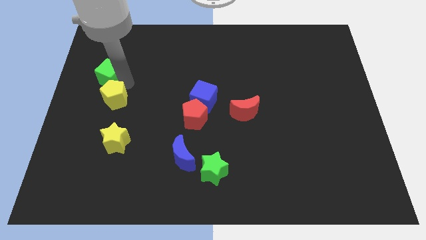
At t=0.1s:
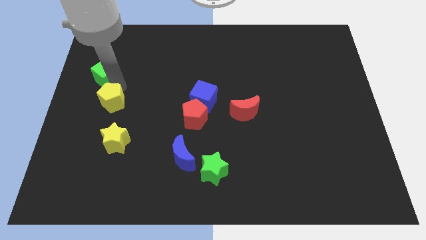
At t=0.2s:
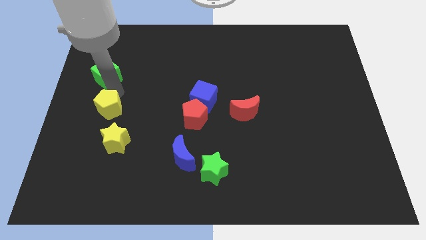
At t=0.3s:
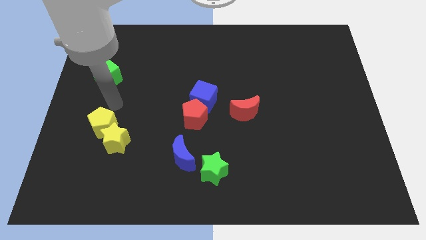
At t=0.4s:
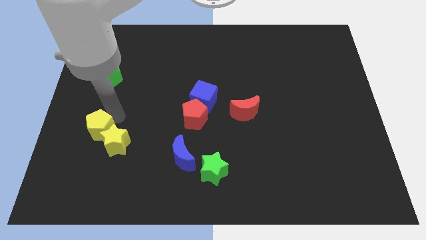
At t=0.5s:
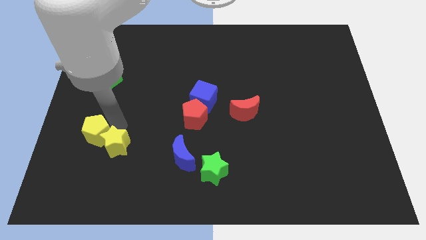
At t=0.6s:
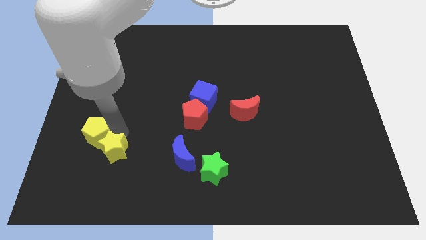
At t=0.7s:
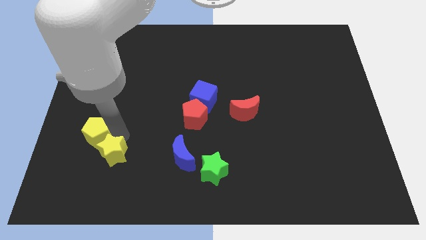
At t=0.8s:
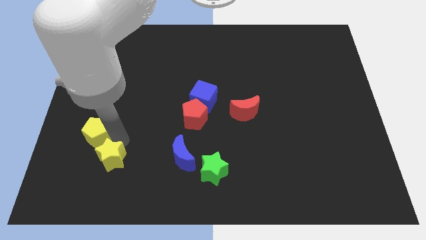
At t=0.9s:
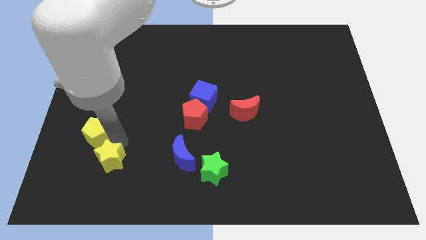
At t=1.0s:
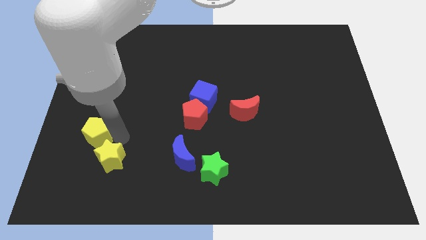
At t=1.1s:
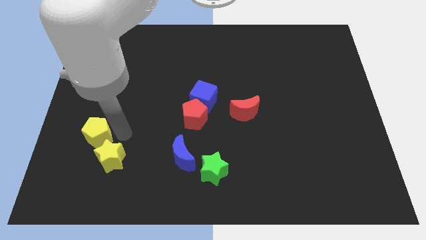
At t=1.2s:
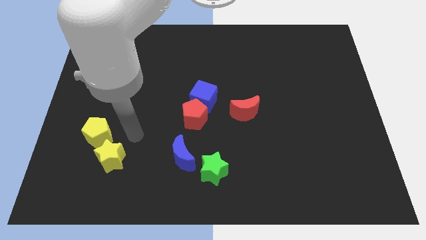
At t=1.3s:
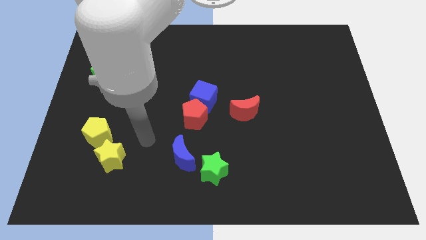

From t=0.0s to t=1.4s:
move the yellow star down to the yellow pentagon

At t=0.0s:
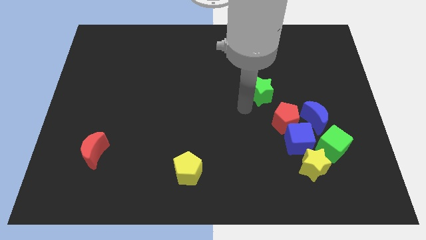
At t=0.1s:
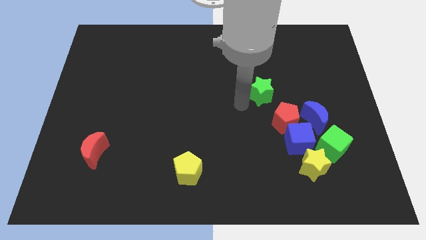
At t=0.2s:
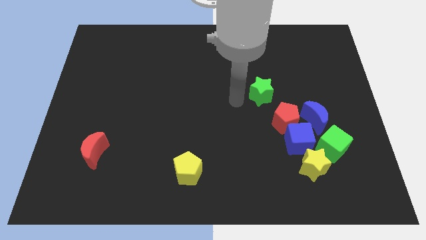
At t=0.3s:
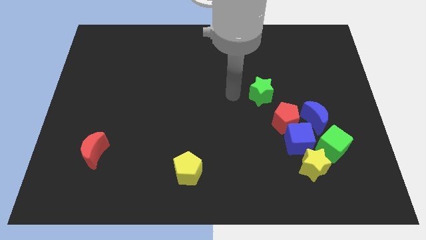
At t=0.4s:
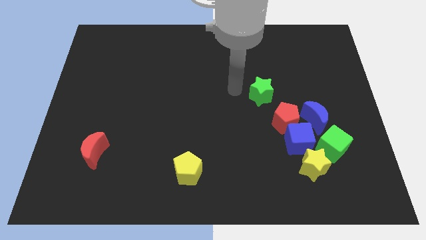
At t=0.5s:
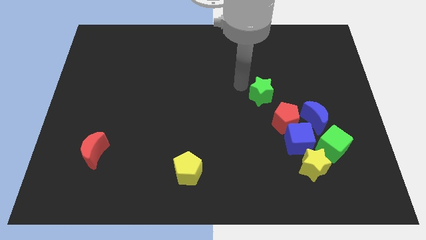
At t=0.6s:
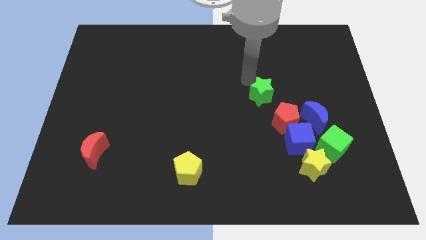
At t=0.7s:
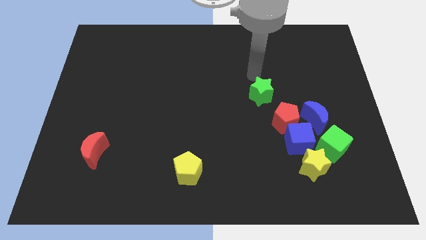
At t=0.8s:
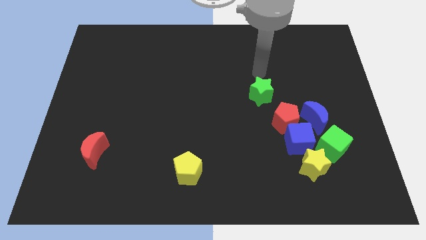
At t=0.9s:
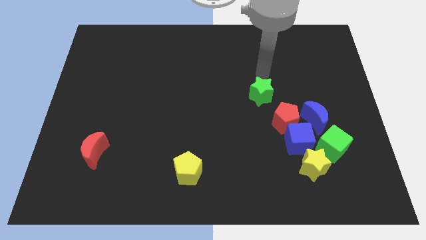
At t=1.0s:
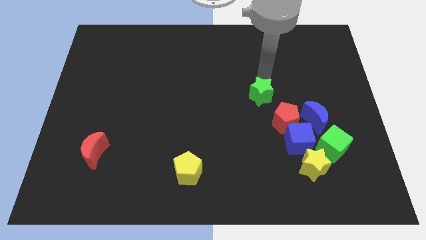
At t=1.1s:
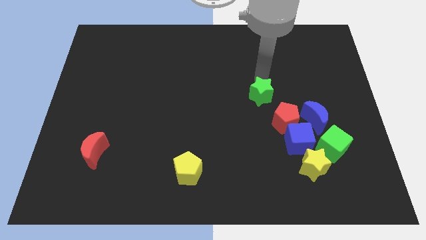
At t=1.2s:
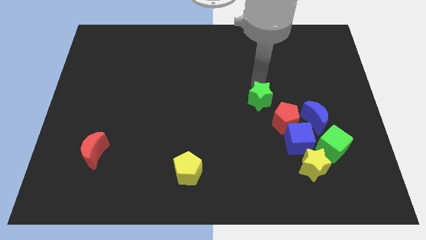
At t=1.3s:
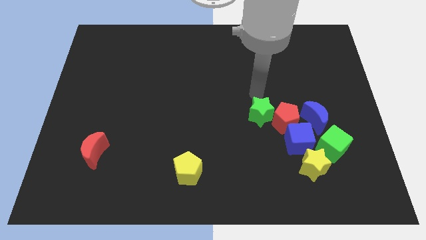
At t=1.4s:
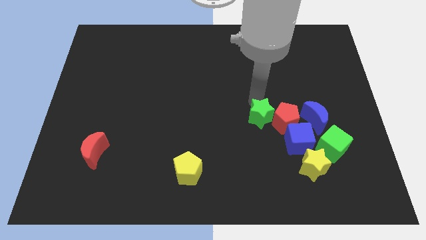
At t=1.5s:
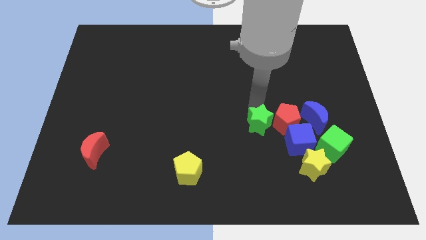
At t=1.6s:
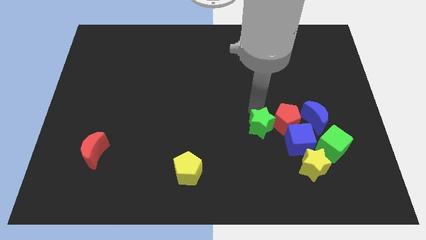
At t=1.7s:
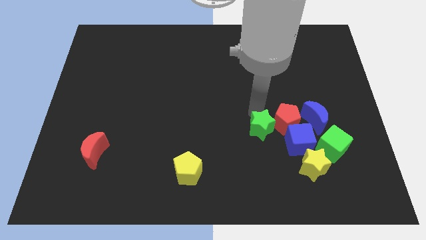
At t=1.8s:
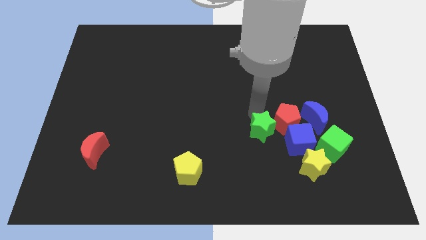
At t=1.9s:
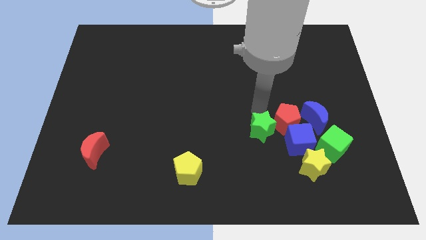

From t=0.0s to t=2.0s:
put the green star left to the red pentagon

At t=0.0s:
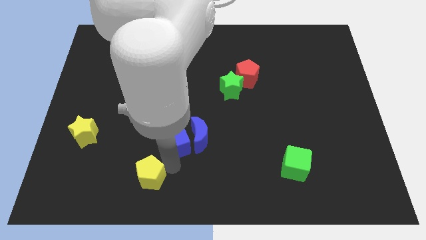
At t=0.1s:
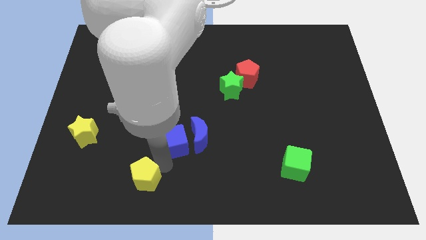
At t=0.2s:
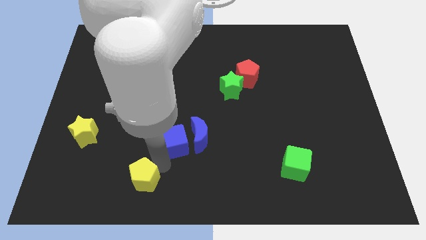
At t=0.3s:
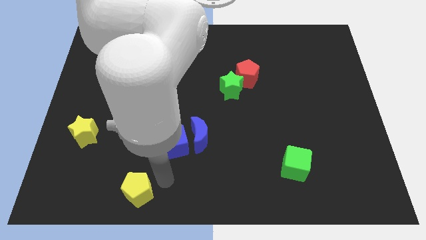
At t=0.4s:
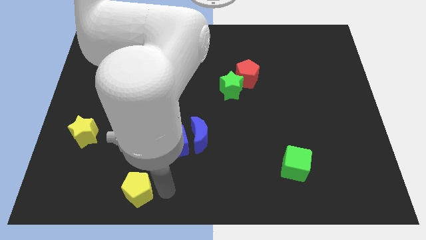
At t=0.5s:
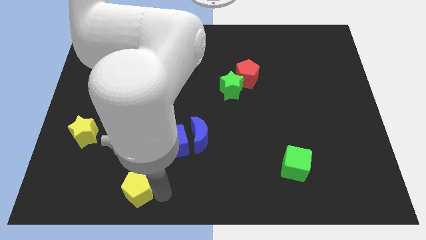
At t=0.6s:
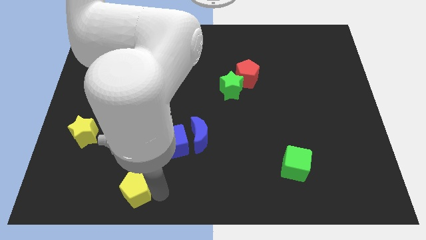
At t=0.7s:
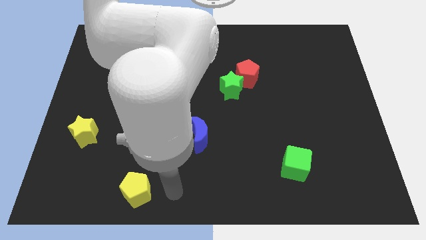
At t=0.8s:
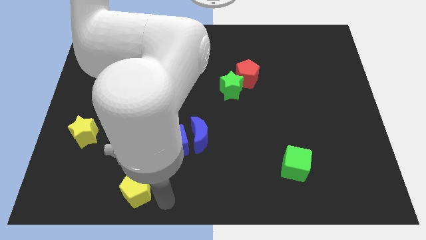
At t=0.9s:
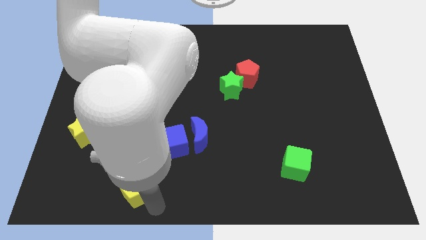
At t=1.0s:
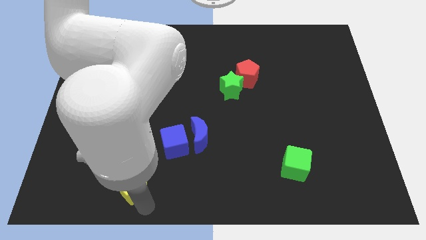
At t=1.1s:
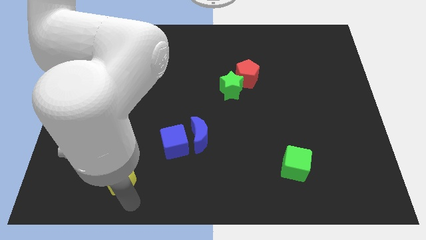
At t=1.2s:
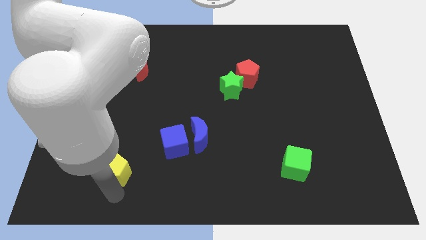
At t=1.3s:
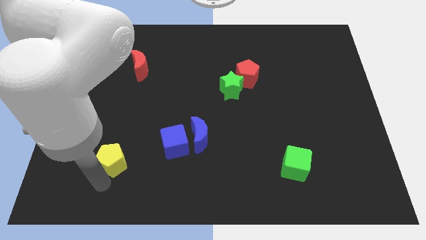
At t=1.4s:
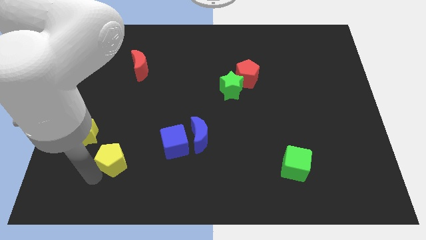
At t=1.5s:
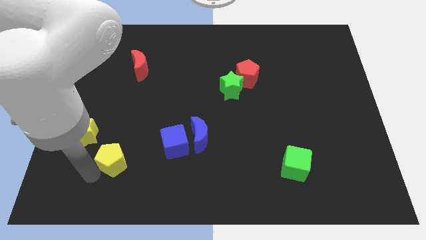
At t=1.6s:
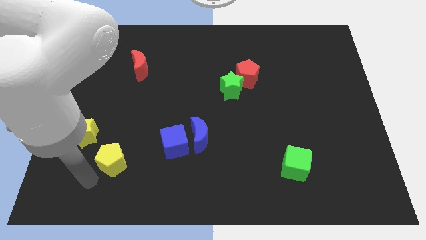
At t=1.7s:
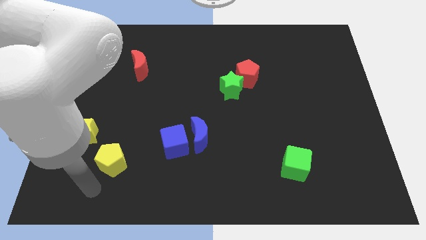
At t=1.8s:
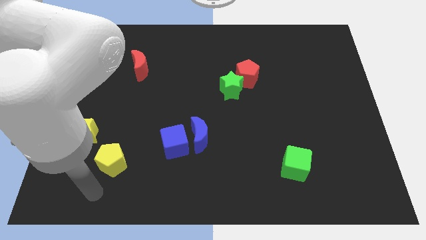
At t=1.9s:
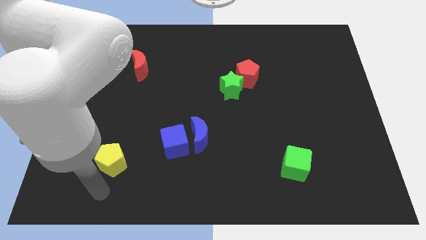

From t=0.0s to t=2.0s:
place the yellow pentagon diagonal below the yellow star

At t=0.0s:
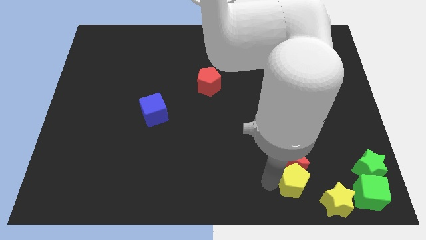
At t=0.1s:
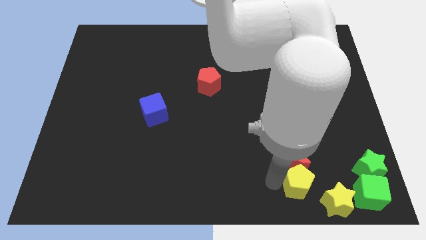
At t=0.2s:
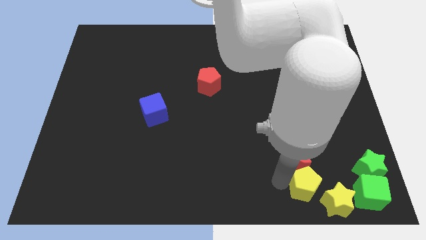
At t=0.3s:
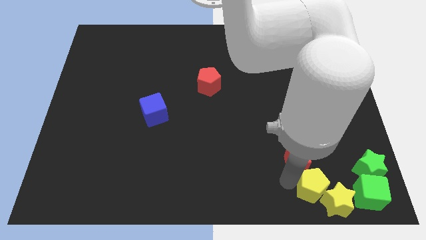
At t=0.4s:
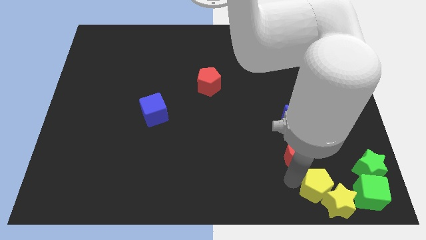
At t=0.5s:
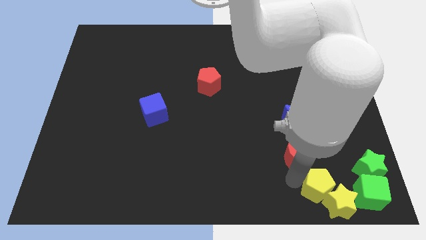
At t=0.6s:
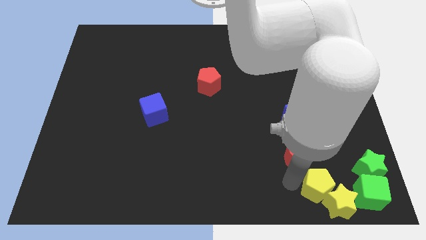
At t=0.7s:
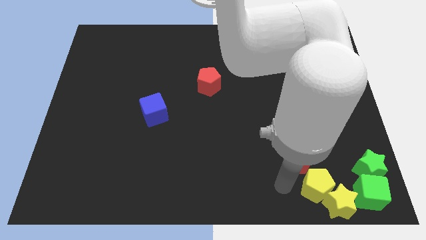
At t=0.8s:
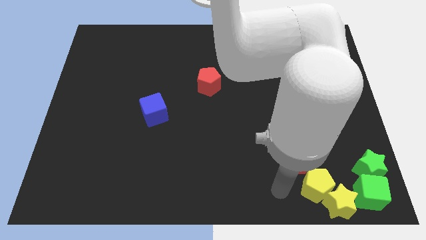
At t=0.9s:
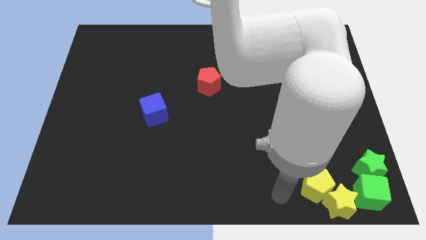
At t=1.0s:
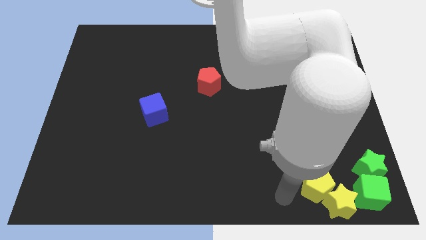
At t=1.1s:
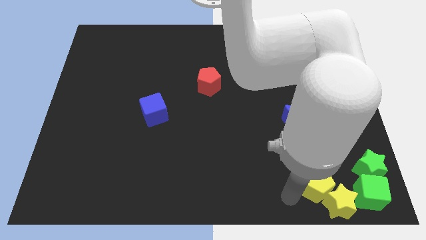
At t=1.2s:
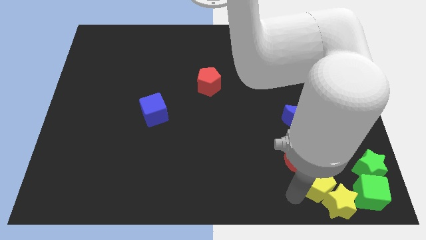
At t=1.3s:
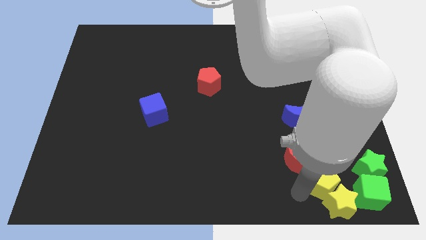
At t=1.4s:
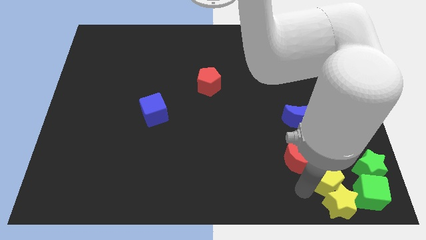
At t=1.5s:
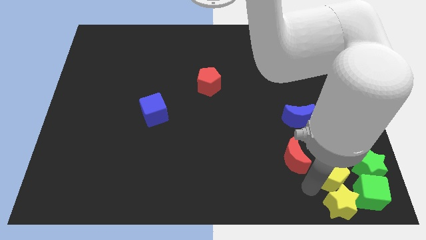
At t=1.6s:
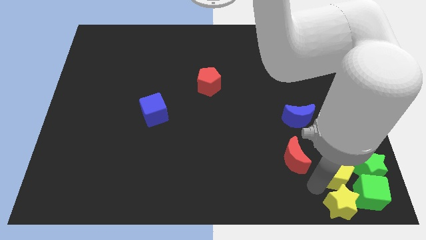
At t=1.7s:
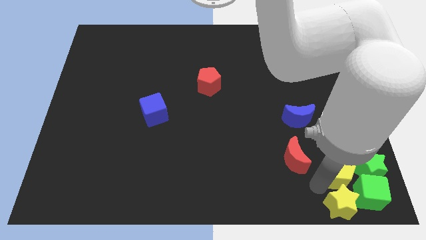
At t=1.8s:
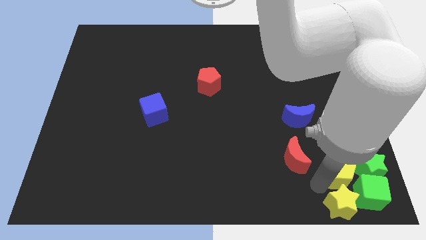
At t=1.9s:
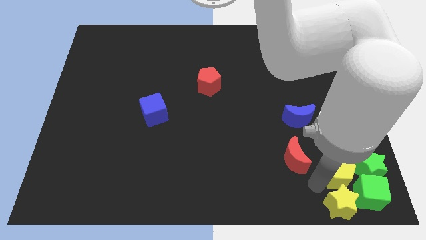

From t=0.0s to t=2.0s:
place the yellow pentagon above the yellow star

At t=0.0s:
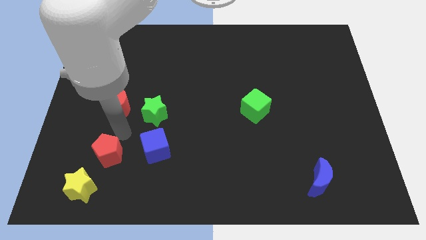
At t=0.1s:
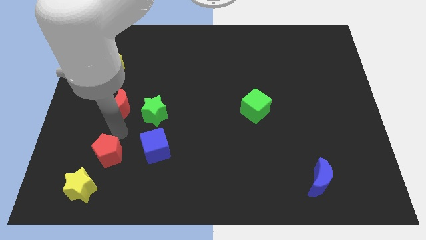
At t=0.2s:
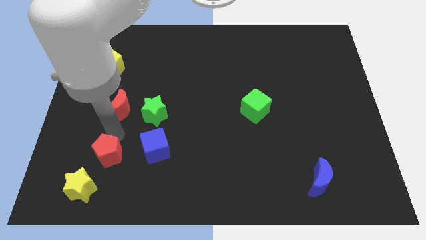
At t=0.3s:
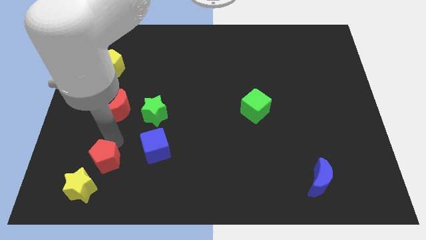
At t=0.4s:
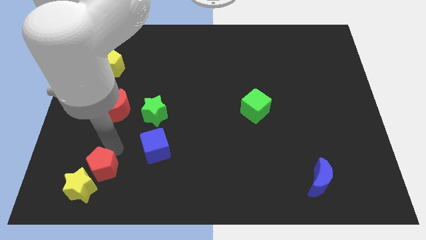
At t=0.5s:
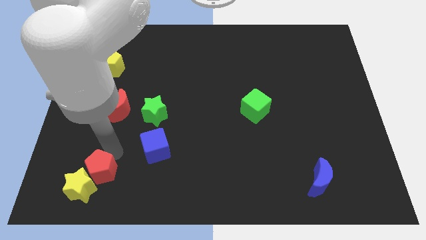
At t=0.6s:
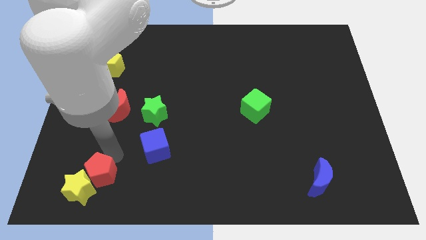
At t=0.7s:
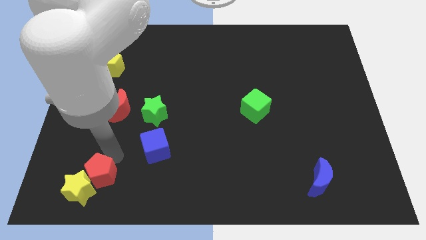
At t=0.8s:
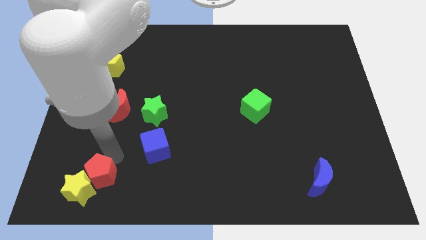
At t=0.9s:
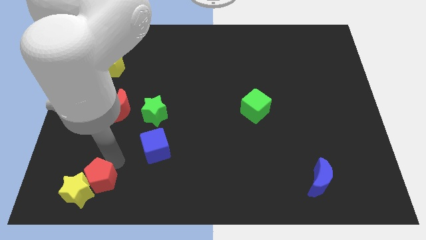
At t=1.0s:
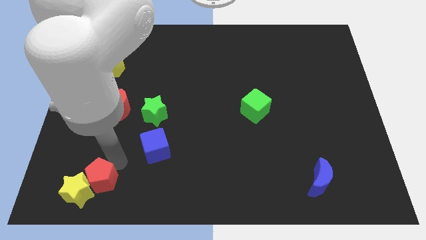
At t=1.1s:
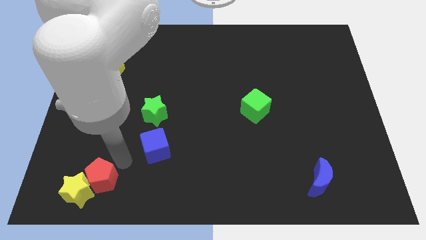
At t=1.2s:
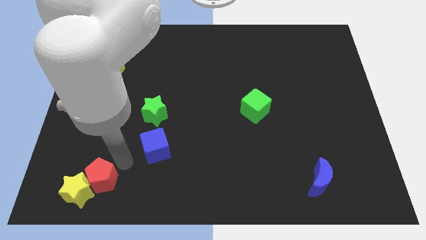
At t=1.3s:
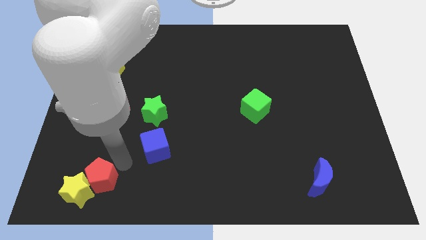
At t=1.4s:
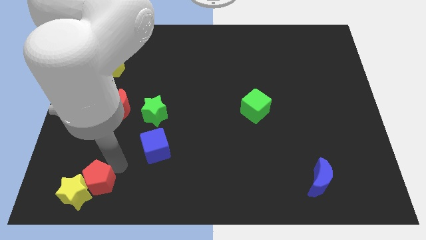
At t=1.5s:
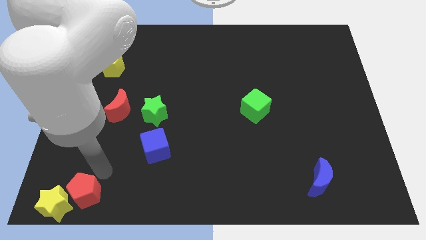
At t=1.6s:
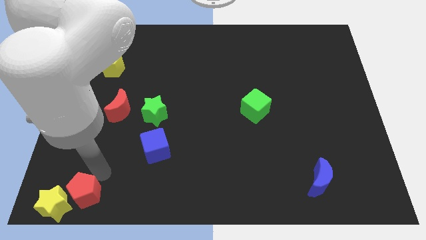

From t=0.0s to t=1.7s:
push the red pentagon into yellow star
